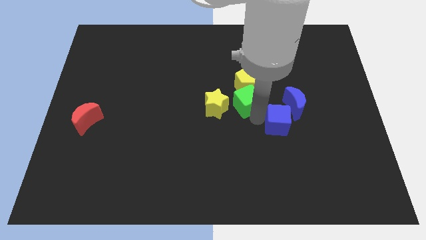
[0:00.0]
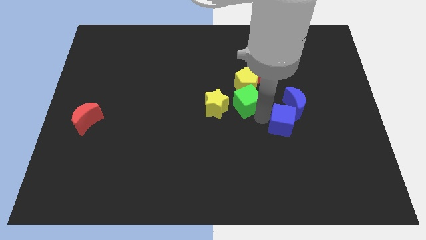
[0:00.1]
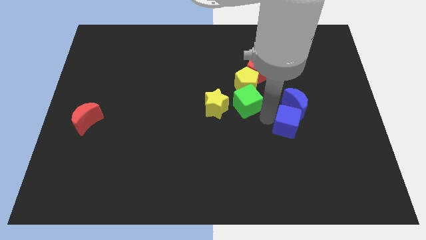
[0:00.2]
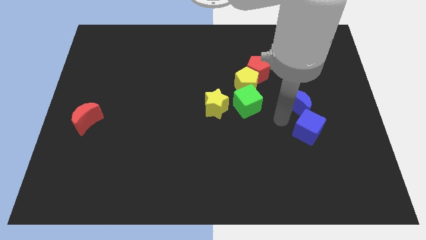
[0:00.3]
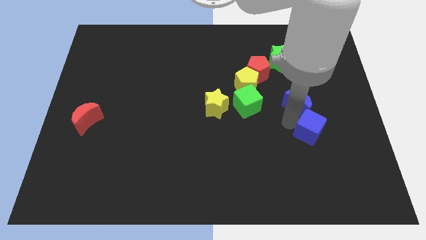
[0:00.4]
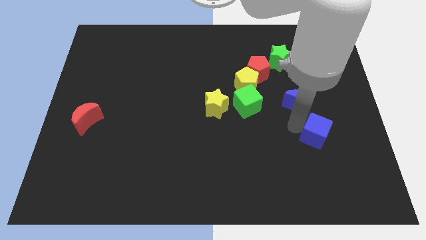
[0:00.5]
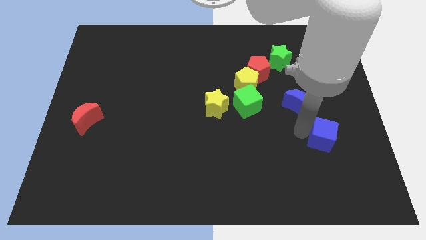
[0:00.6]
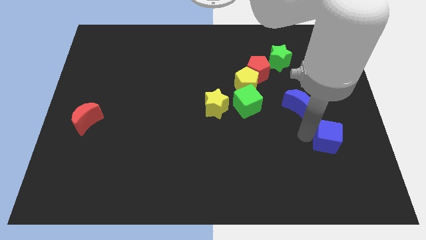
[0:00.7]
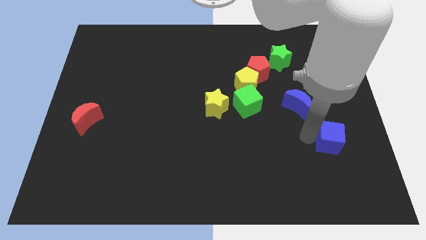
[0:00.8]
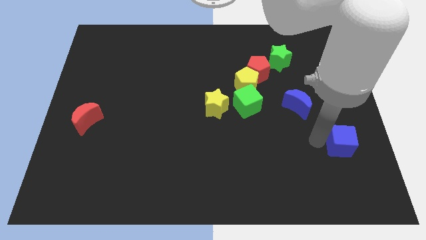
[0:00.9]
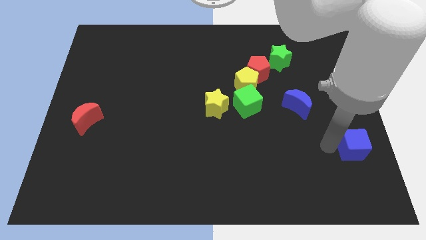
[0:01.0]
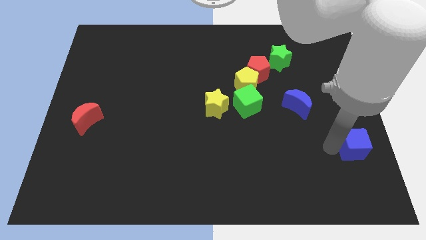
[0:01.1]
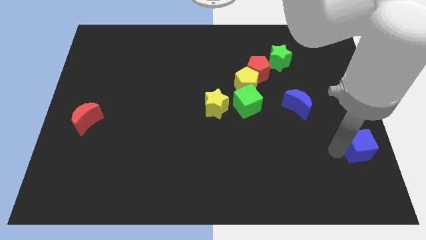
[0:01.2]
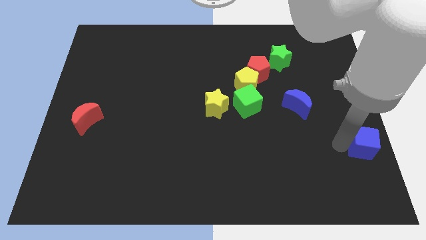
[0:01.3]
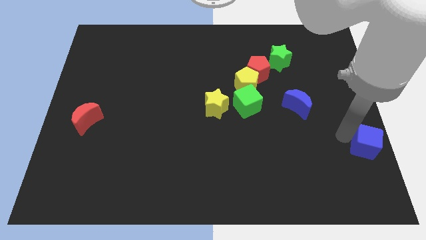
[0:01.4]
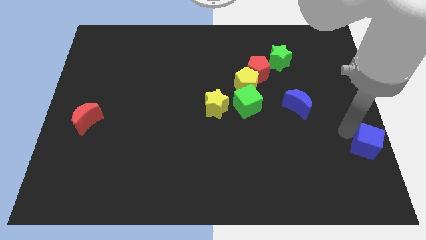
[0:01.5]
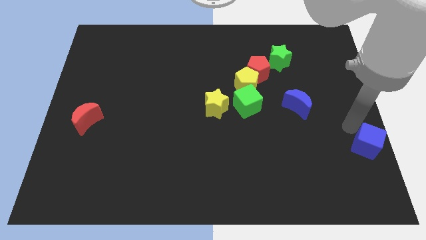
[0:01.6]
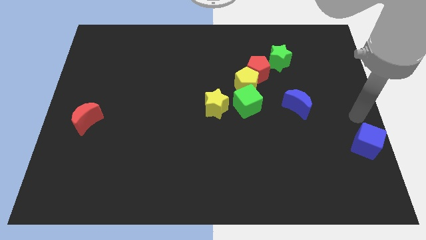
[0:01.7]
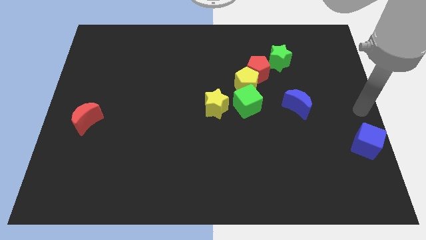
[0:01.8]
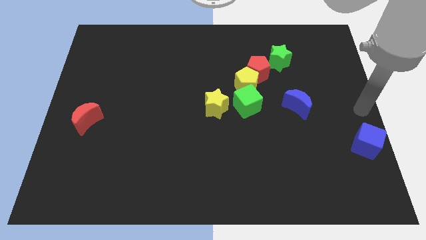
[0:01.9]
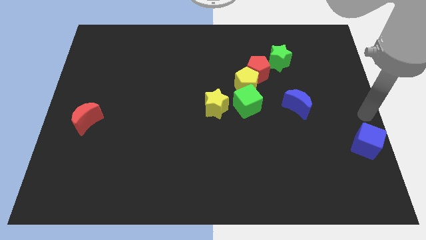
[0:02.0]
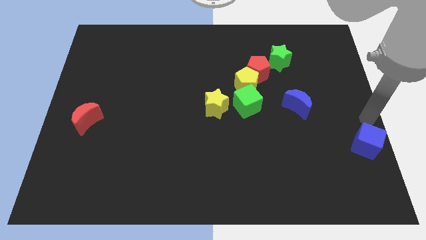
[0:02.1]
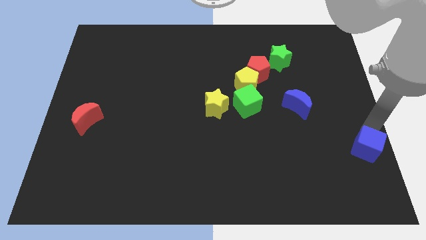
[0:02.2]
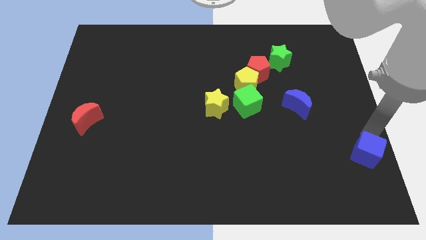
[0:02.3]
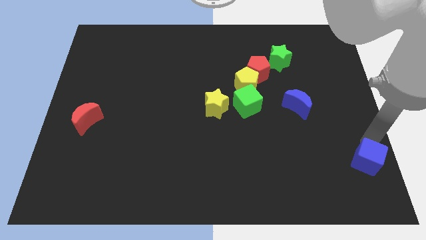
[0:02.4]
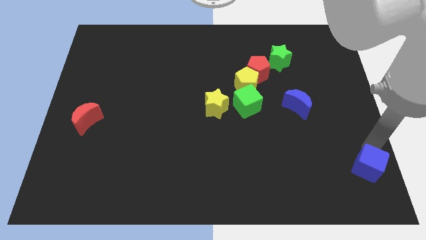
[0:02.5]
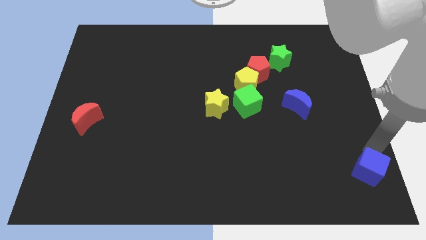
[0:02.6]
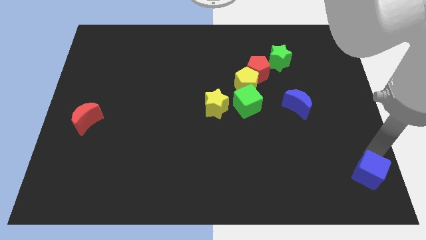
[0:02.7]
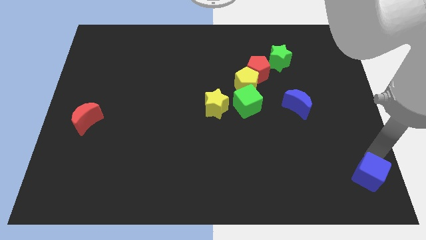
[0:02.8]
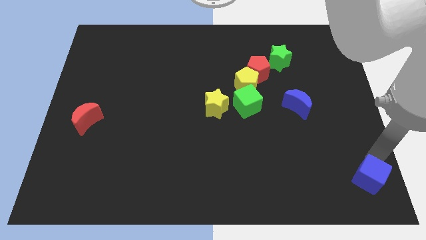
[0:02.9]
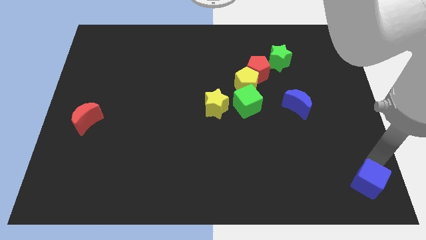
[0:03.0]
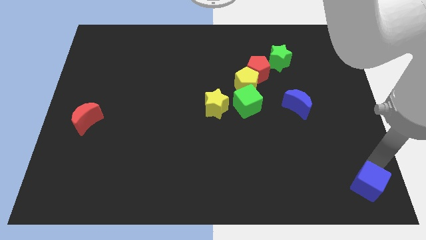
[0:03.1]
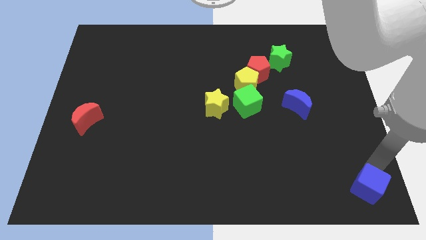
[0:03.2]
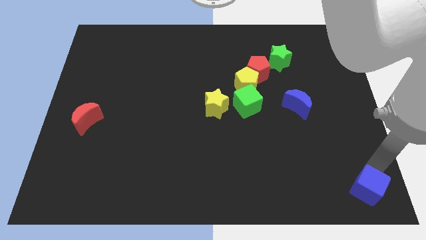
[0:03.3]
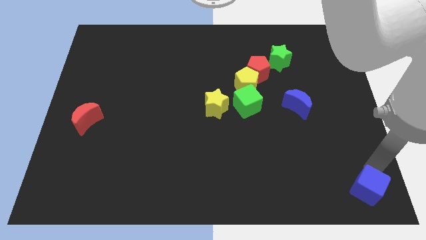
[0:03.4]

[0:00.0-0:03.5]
slide the blue cube to the bottom right of the table

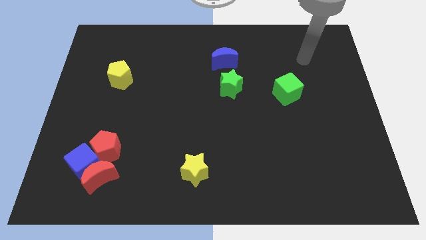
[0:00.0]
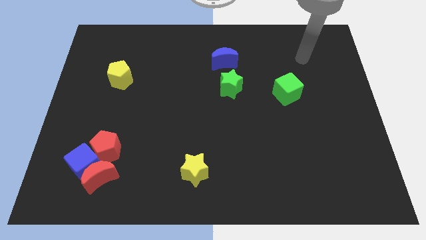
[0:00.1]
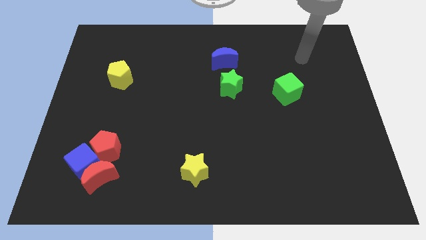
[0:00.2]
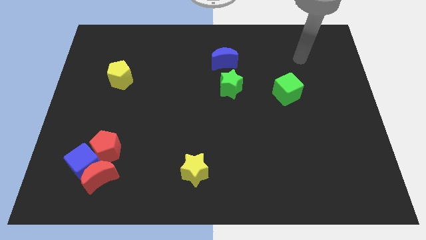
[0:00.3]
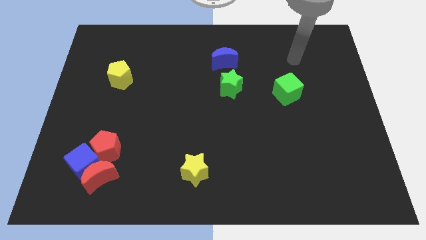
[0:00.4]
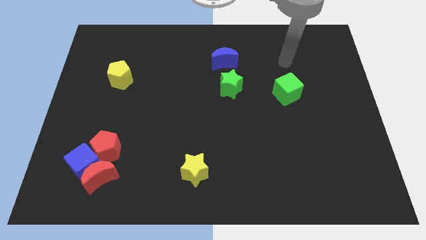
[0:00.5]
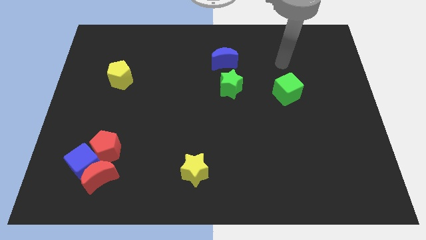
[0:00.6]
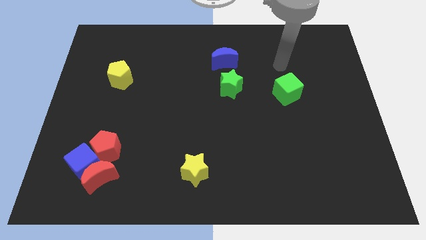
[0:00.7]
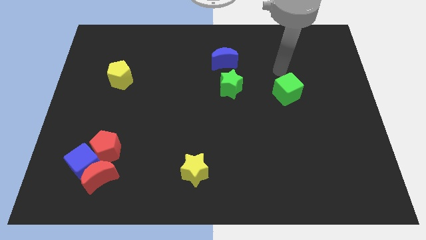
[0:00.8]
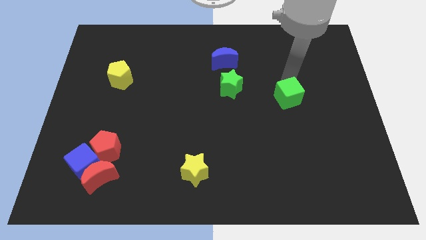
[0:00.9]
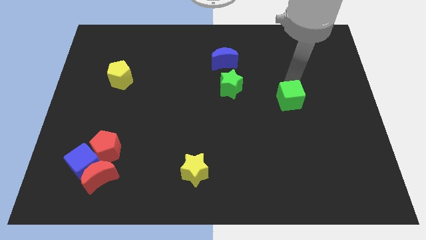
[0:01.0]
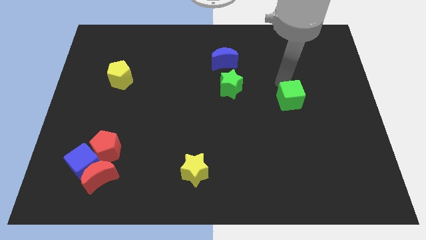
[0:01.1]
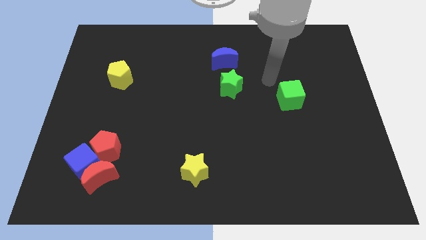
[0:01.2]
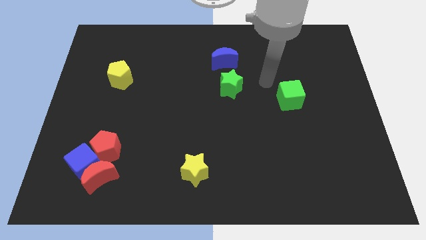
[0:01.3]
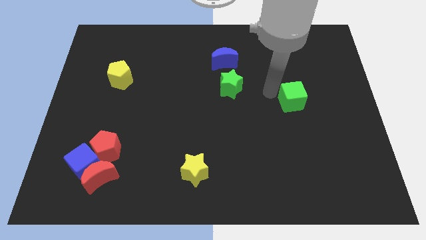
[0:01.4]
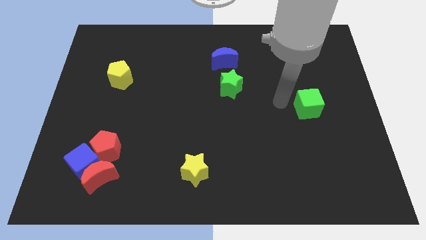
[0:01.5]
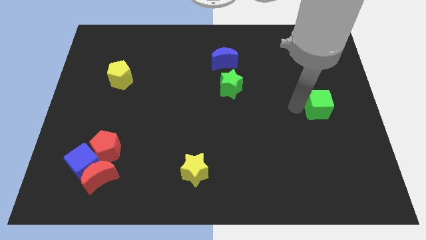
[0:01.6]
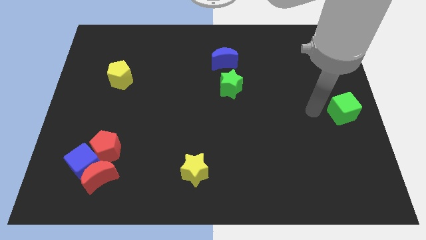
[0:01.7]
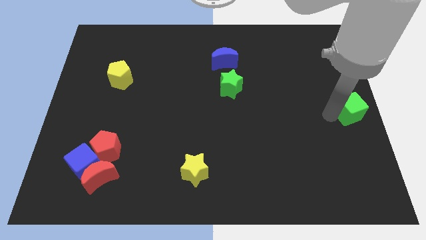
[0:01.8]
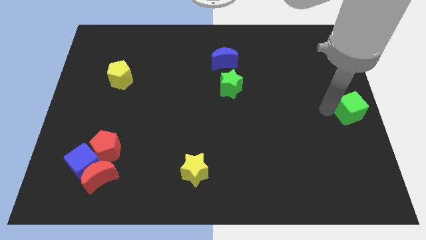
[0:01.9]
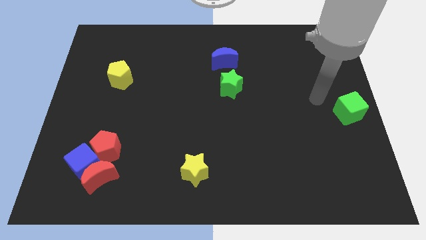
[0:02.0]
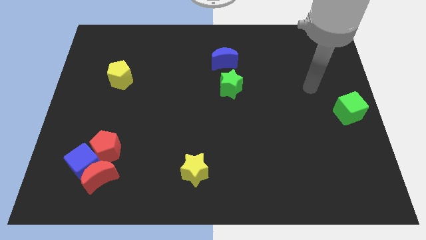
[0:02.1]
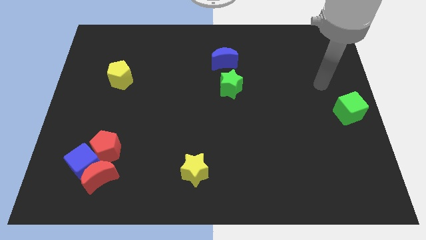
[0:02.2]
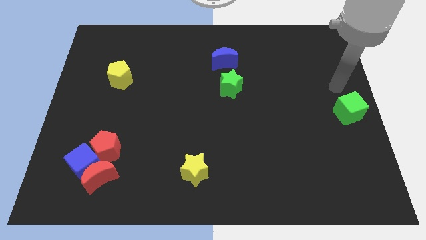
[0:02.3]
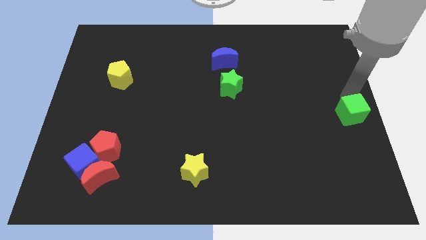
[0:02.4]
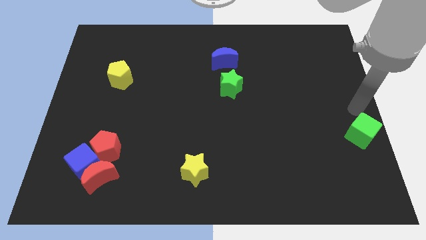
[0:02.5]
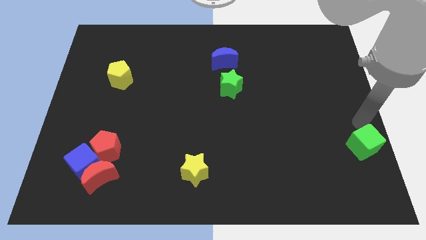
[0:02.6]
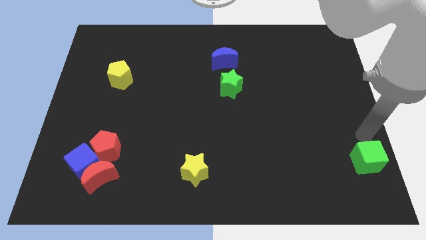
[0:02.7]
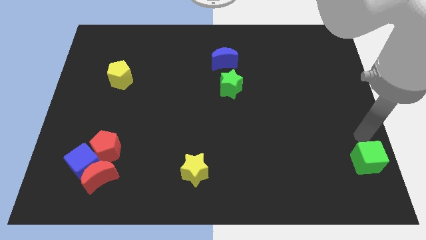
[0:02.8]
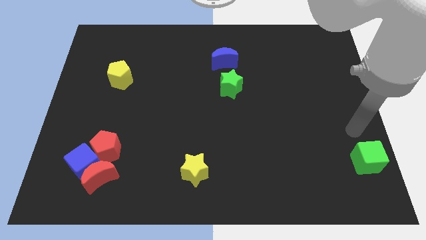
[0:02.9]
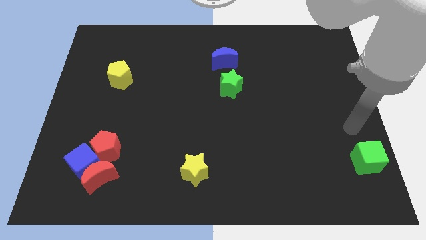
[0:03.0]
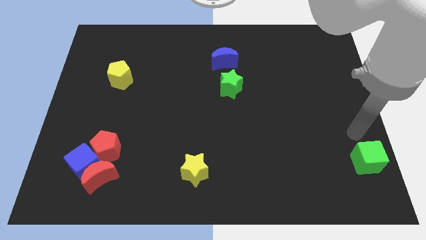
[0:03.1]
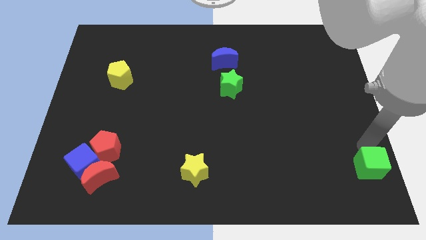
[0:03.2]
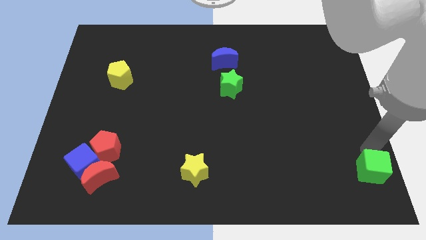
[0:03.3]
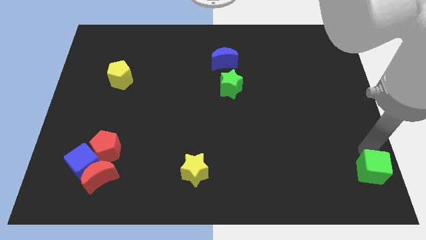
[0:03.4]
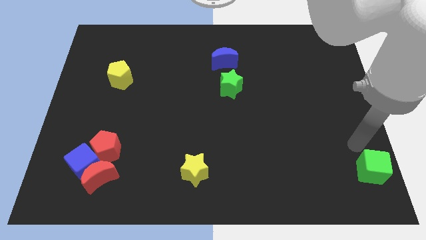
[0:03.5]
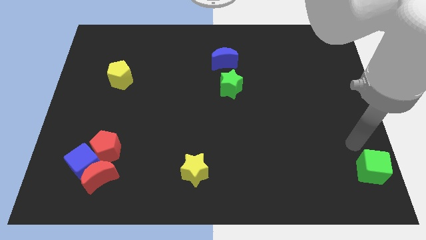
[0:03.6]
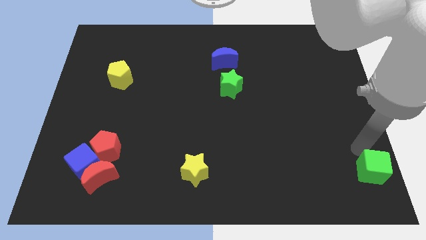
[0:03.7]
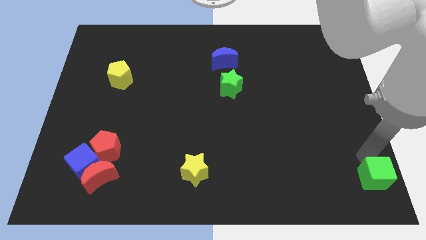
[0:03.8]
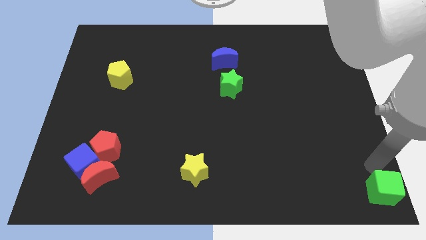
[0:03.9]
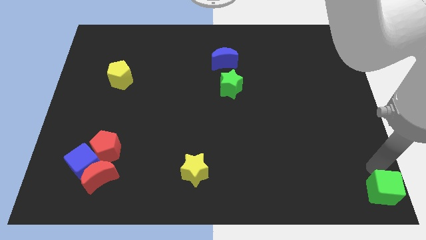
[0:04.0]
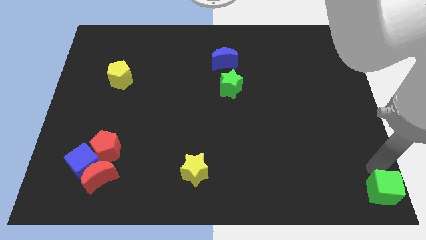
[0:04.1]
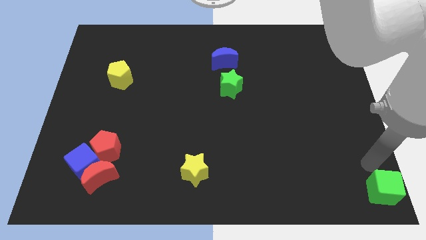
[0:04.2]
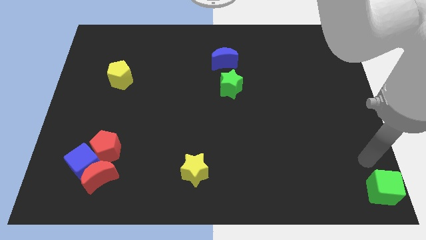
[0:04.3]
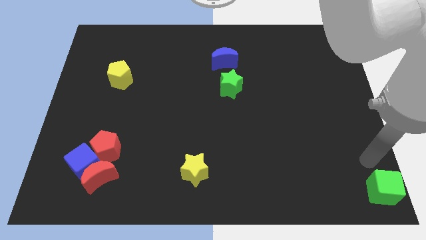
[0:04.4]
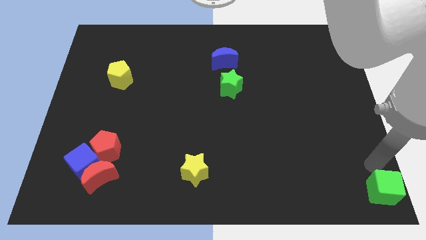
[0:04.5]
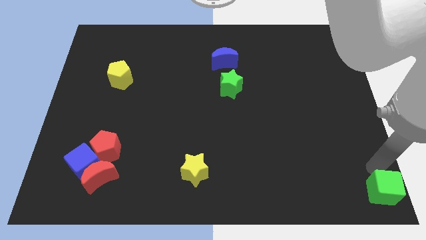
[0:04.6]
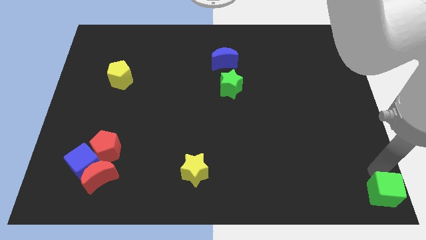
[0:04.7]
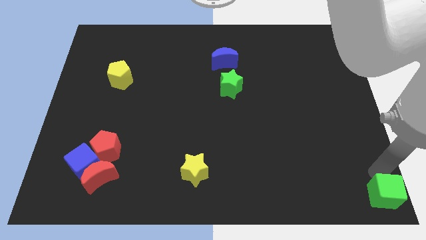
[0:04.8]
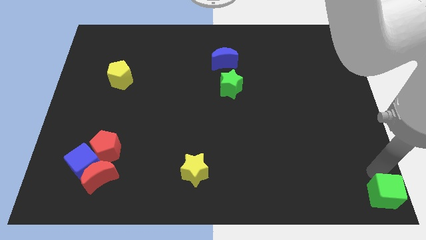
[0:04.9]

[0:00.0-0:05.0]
push the green cube towards the bottom right corner of the board

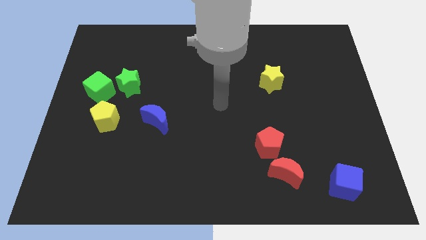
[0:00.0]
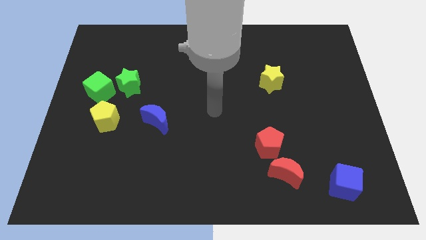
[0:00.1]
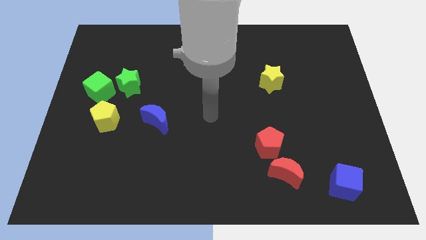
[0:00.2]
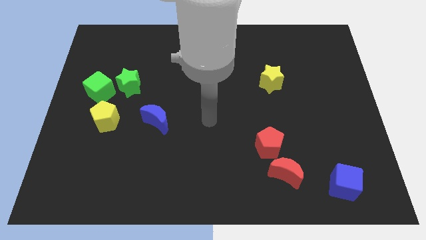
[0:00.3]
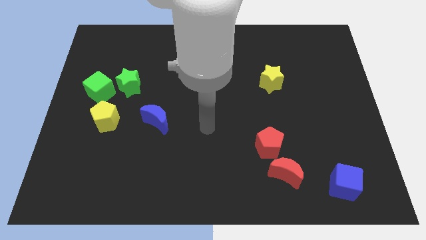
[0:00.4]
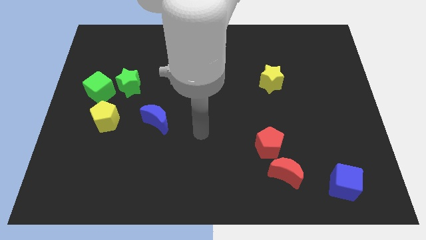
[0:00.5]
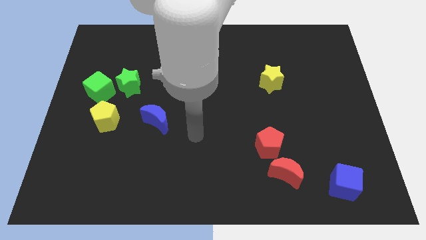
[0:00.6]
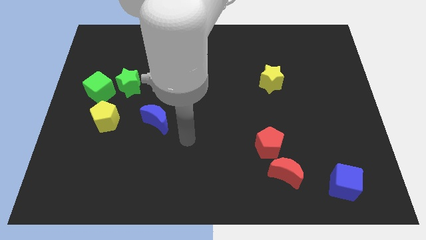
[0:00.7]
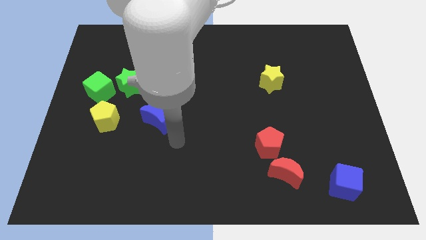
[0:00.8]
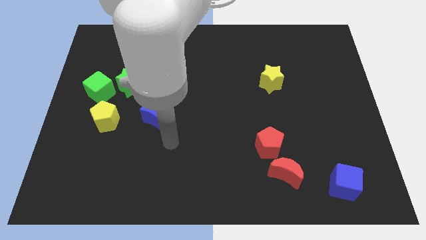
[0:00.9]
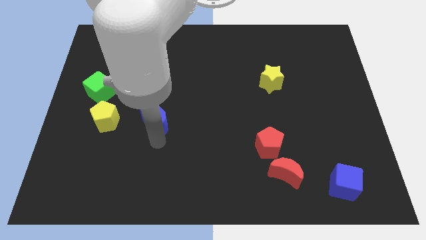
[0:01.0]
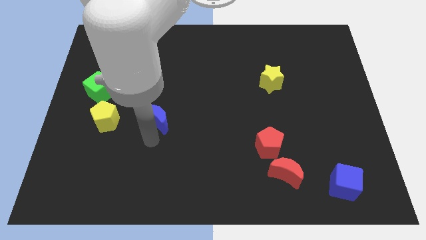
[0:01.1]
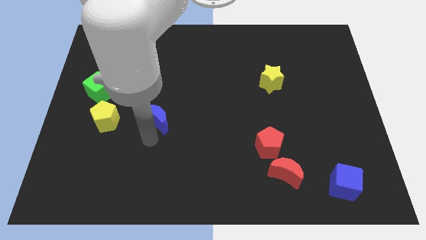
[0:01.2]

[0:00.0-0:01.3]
move your arm to the bottom side of the blue moon
